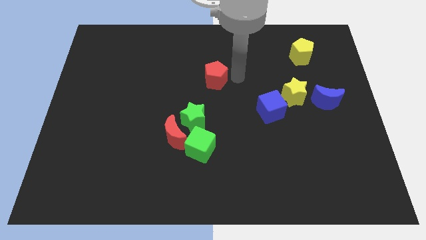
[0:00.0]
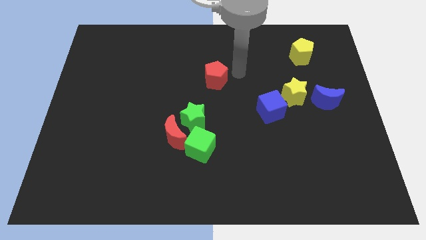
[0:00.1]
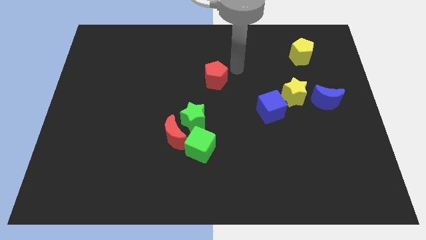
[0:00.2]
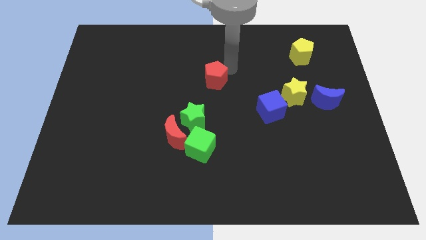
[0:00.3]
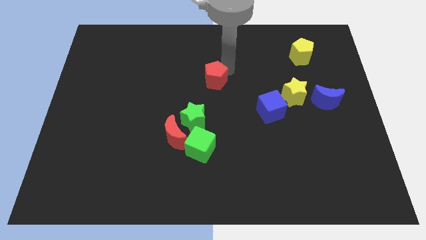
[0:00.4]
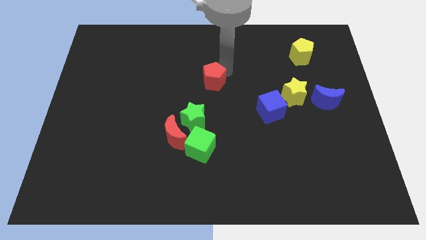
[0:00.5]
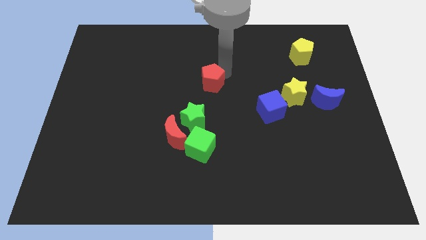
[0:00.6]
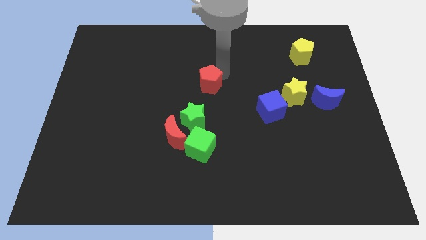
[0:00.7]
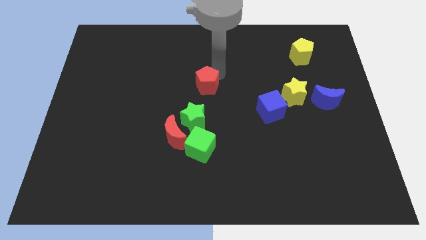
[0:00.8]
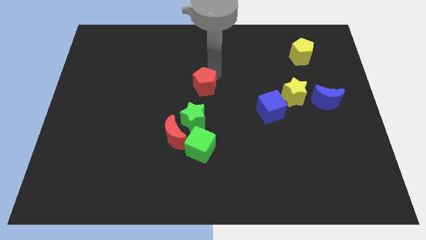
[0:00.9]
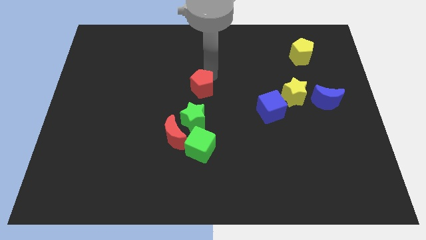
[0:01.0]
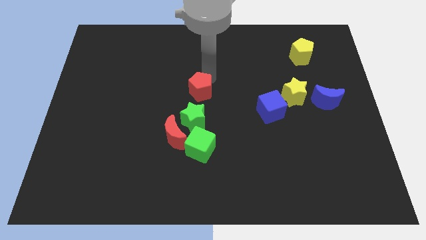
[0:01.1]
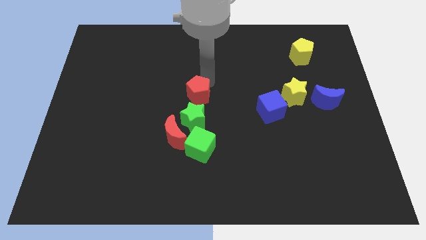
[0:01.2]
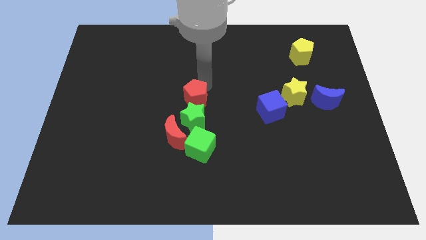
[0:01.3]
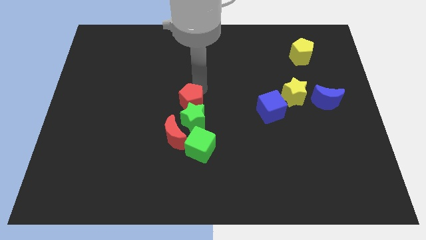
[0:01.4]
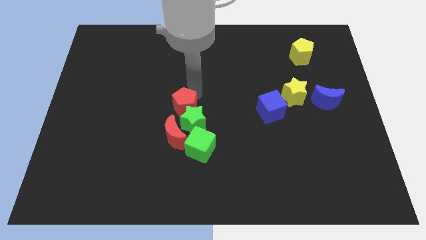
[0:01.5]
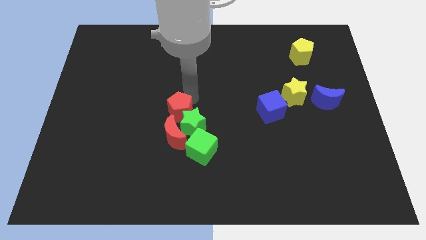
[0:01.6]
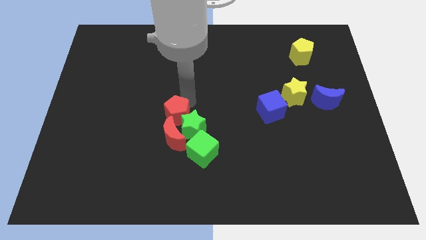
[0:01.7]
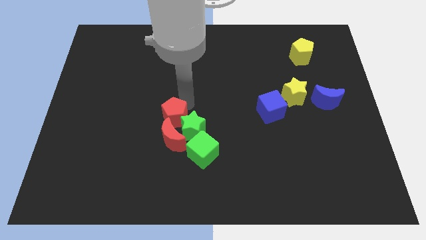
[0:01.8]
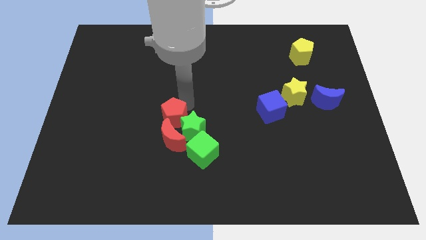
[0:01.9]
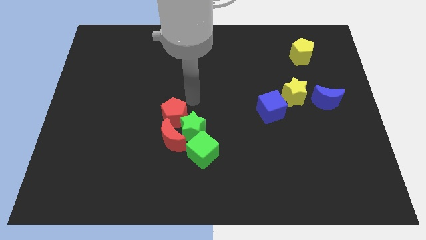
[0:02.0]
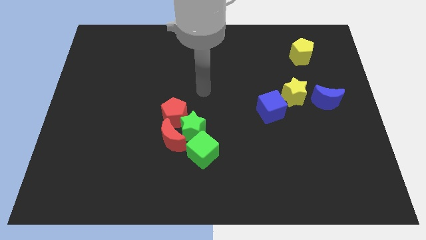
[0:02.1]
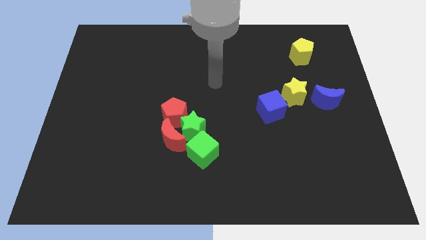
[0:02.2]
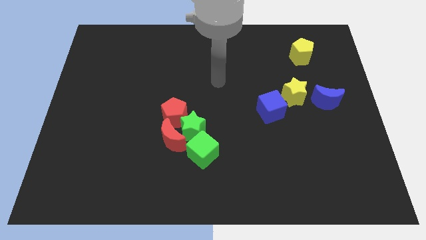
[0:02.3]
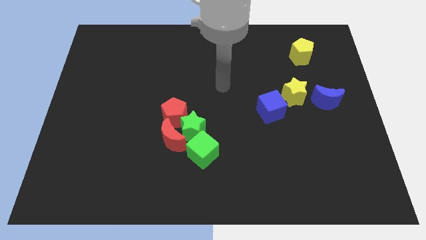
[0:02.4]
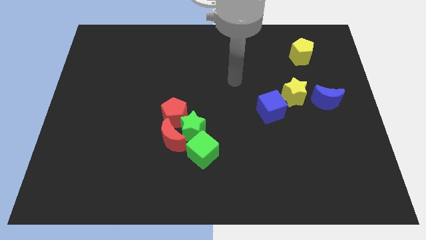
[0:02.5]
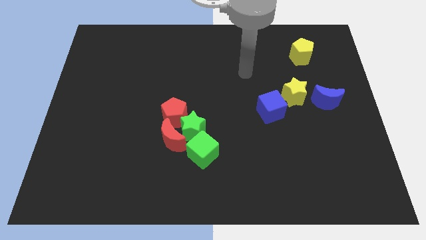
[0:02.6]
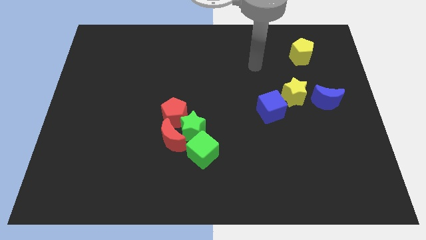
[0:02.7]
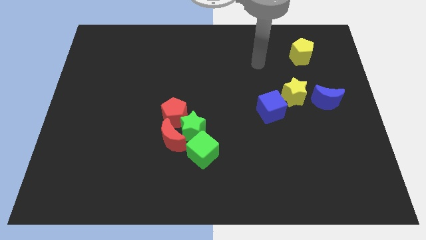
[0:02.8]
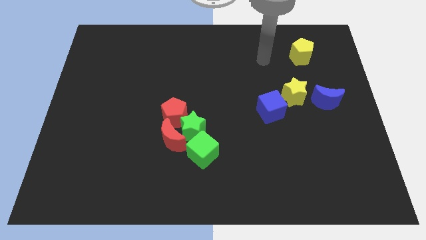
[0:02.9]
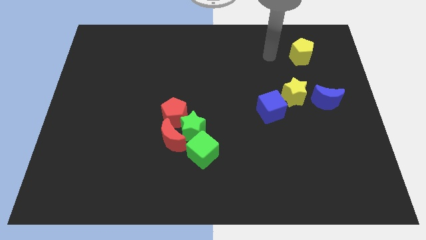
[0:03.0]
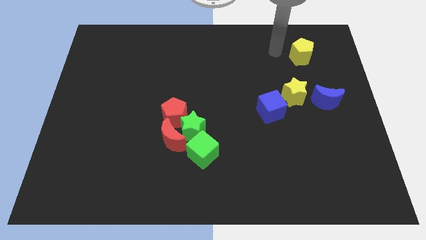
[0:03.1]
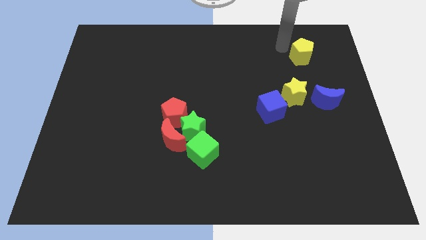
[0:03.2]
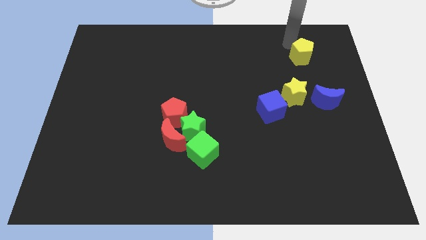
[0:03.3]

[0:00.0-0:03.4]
push the red pentagon close to the red moon and green star

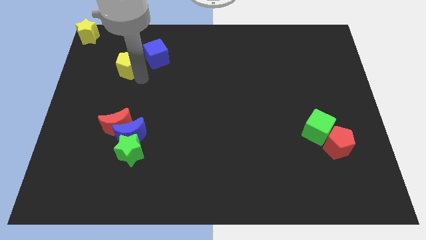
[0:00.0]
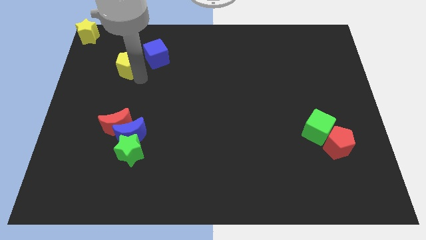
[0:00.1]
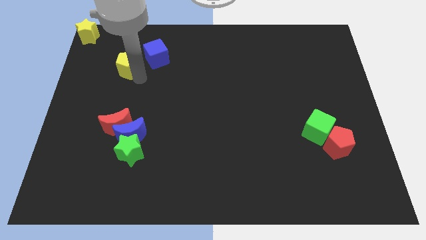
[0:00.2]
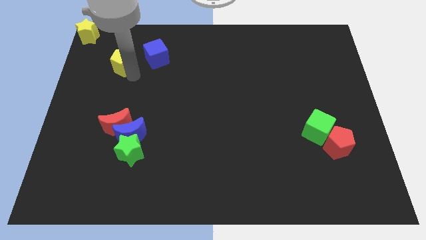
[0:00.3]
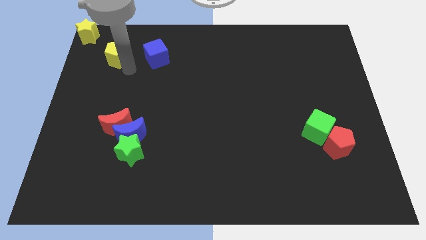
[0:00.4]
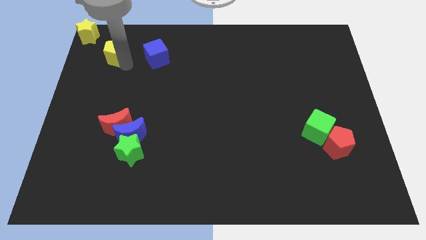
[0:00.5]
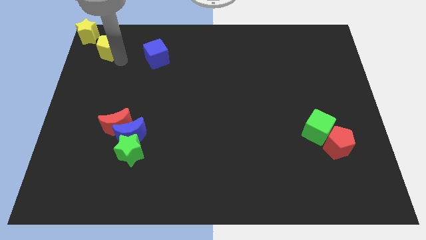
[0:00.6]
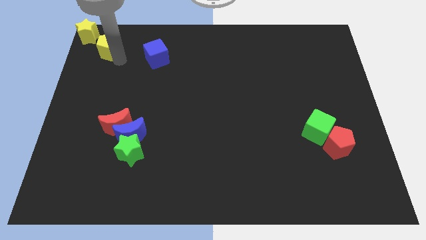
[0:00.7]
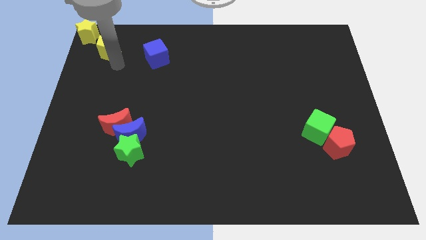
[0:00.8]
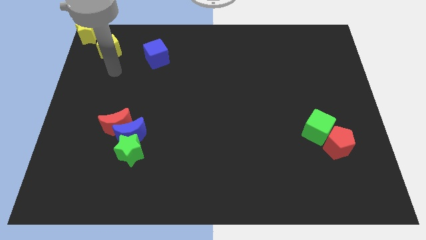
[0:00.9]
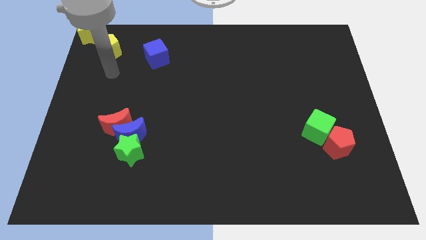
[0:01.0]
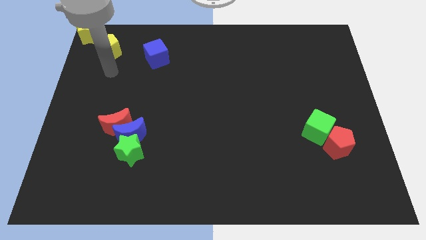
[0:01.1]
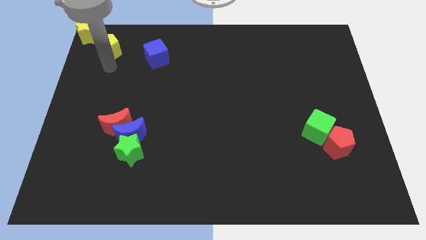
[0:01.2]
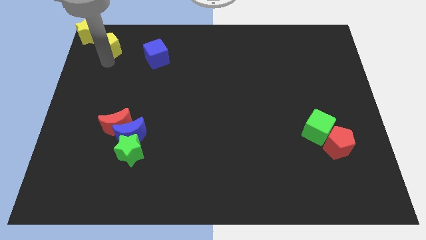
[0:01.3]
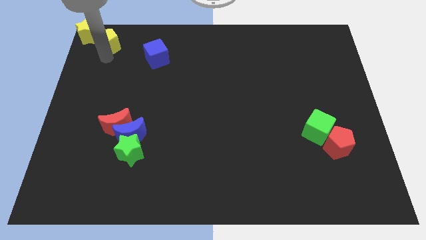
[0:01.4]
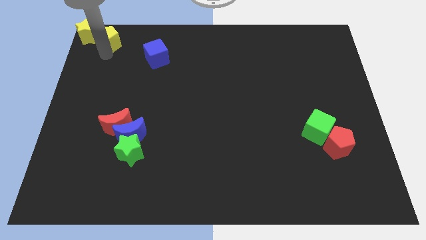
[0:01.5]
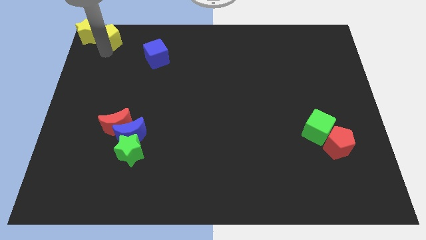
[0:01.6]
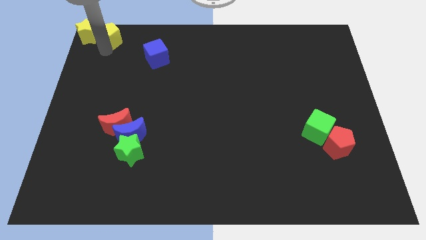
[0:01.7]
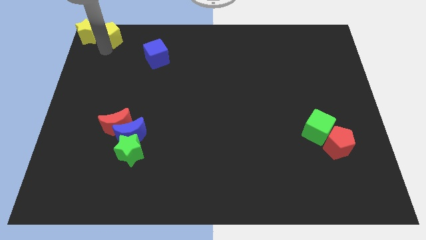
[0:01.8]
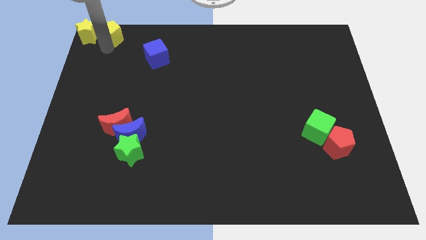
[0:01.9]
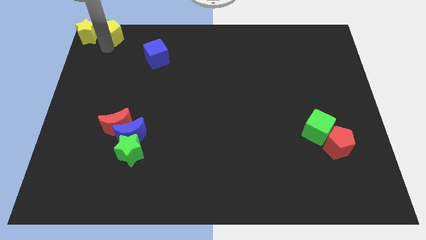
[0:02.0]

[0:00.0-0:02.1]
move the yellow pentagon to the right side of the yellow star

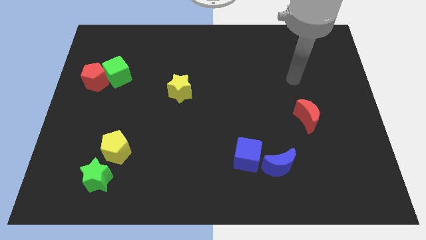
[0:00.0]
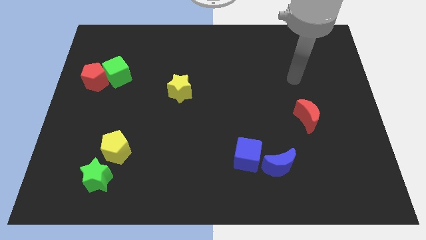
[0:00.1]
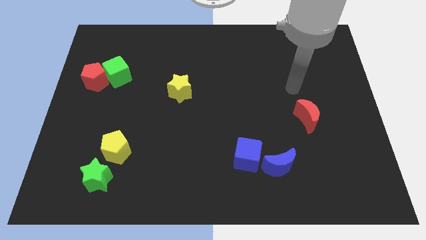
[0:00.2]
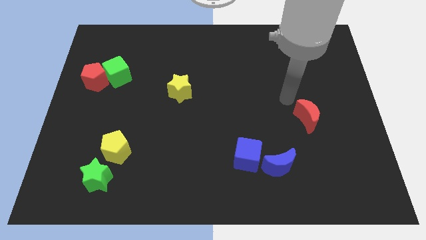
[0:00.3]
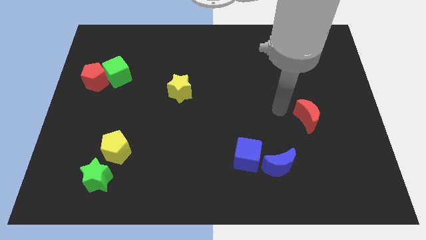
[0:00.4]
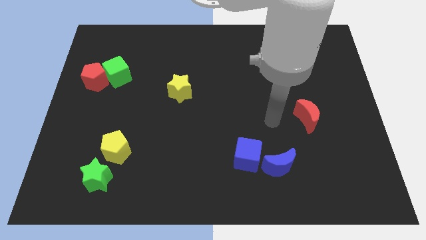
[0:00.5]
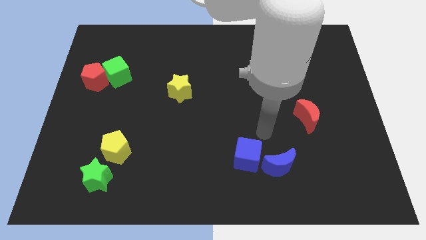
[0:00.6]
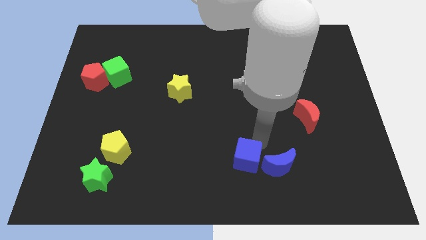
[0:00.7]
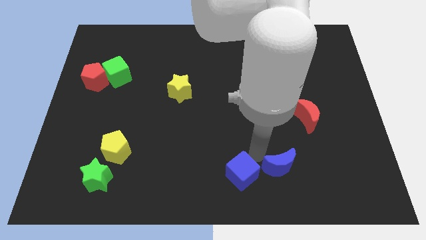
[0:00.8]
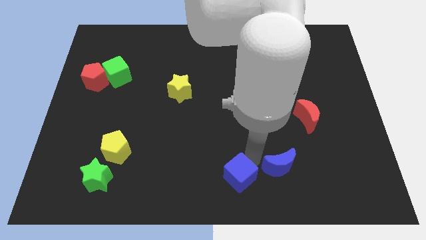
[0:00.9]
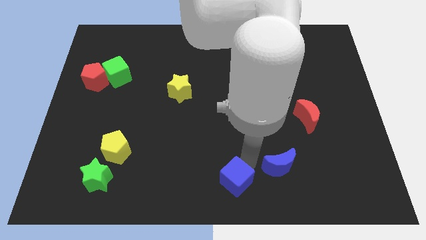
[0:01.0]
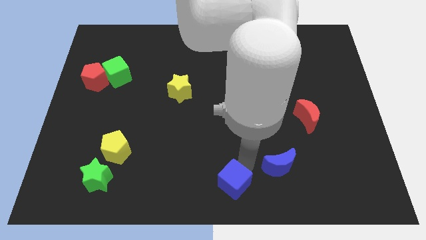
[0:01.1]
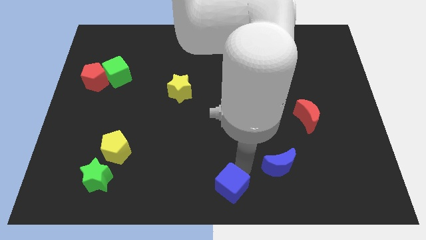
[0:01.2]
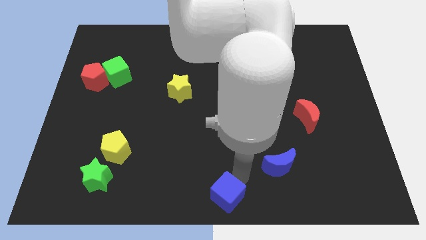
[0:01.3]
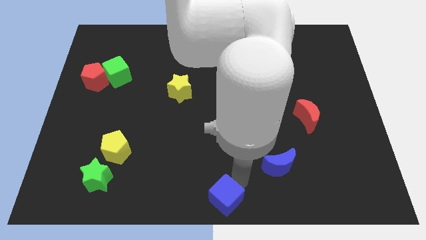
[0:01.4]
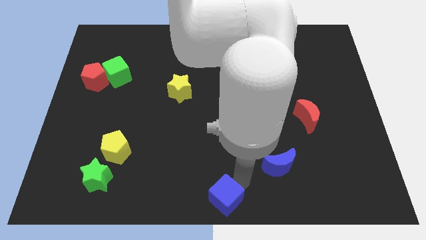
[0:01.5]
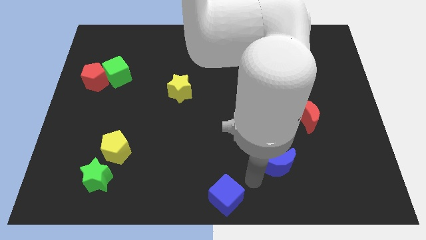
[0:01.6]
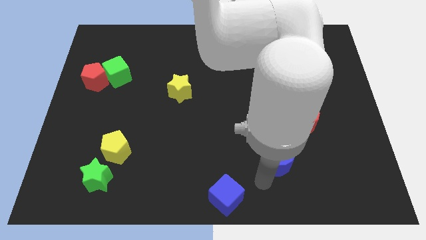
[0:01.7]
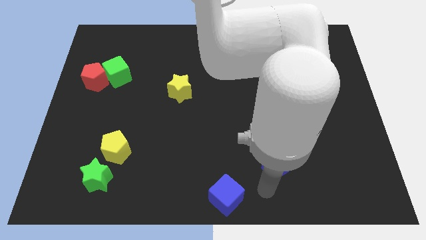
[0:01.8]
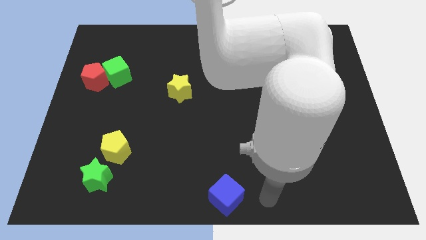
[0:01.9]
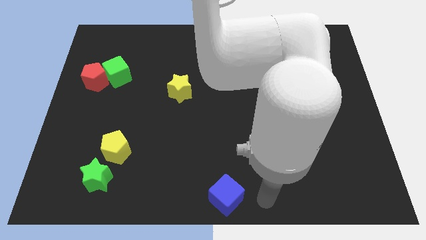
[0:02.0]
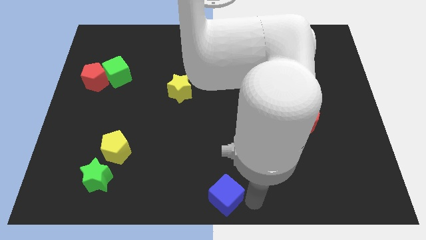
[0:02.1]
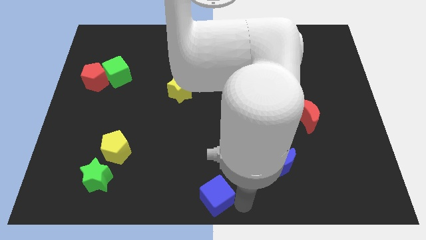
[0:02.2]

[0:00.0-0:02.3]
separate blue cube from blue moon

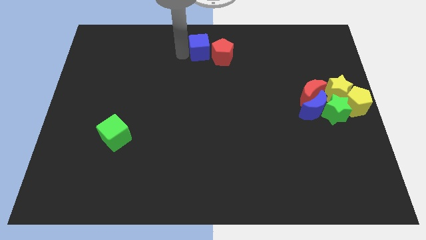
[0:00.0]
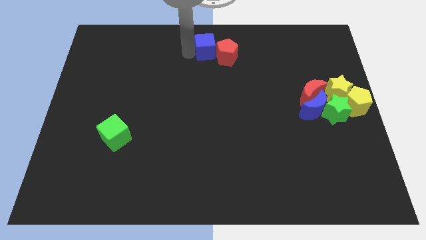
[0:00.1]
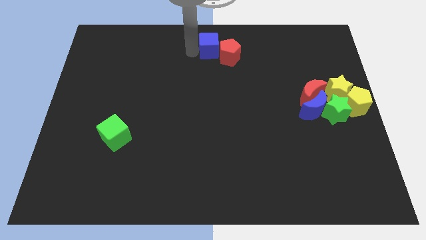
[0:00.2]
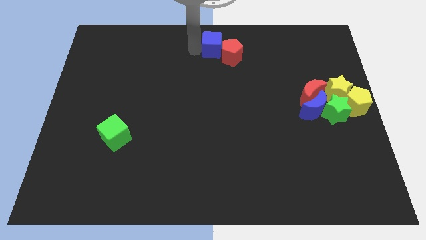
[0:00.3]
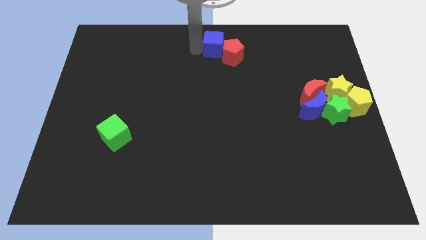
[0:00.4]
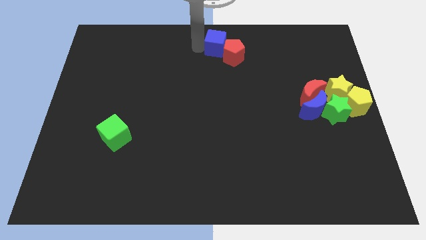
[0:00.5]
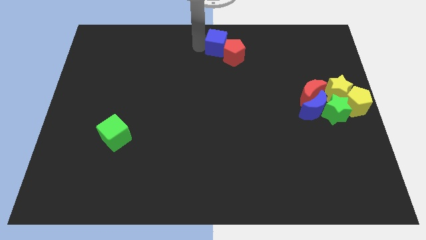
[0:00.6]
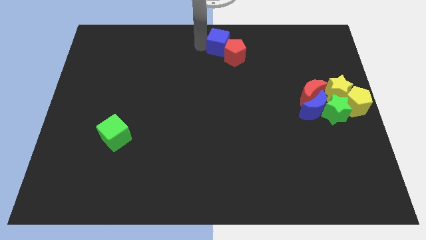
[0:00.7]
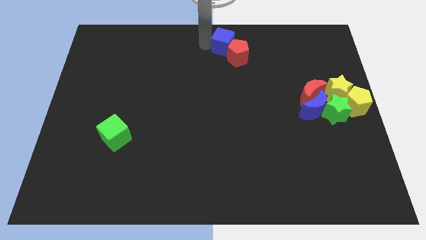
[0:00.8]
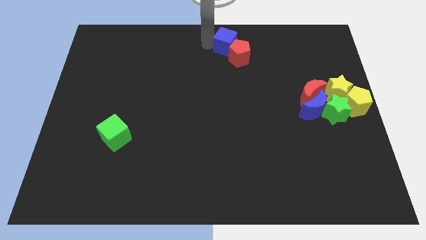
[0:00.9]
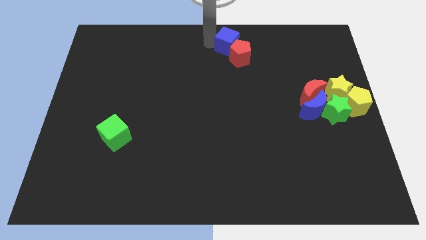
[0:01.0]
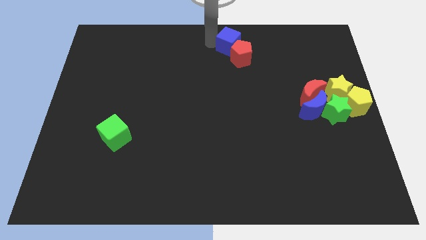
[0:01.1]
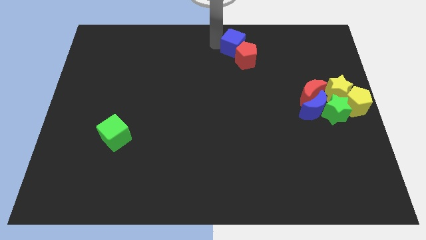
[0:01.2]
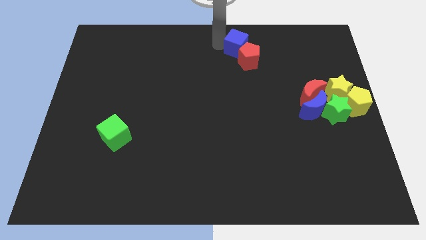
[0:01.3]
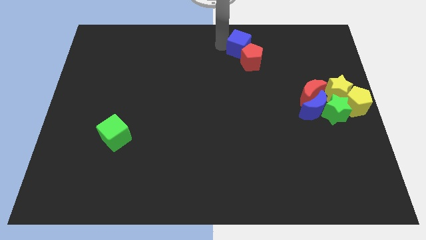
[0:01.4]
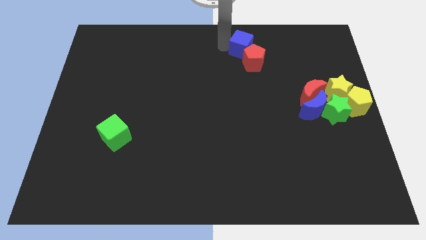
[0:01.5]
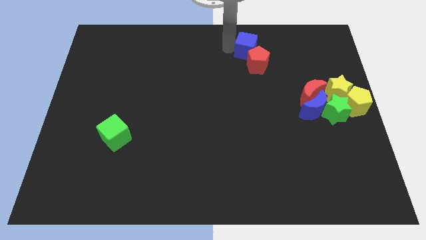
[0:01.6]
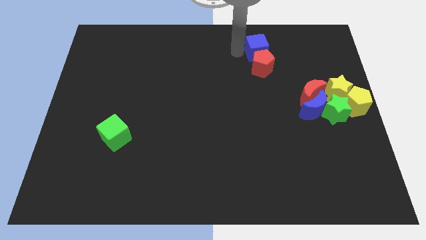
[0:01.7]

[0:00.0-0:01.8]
push the blue cube into the red pentagon
